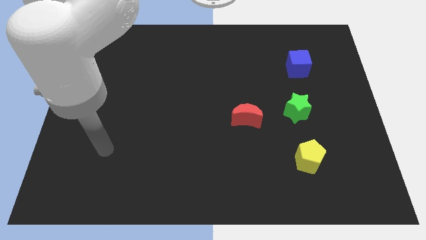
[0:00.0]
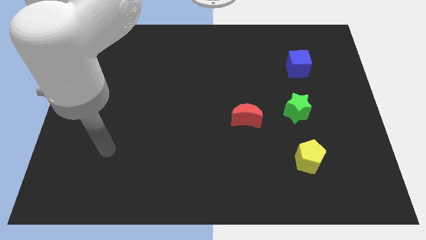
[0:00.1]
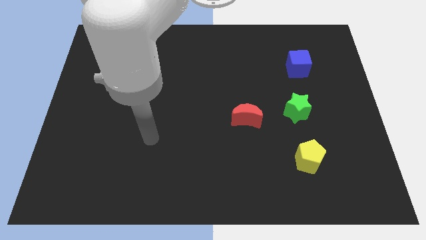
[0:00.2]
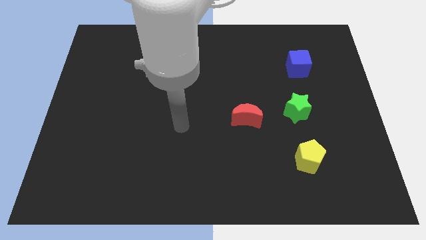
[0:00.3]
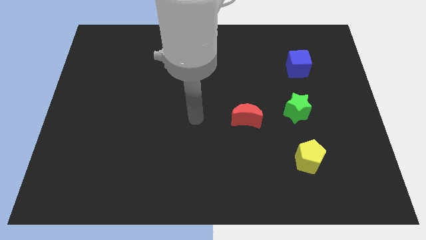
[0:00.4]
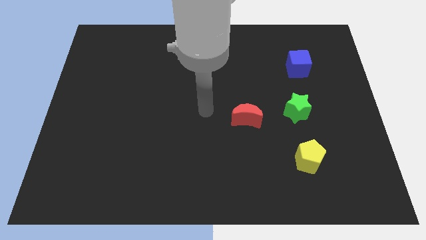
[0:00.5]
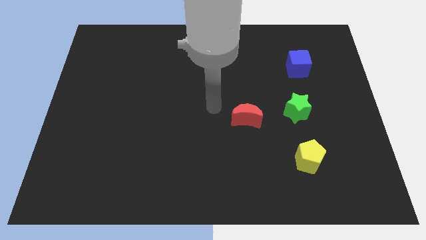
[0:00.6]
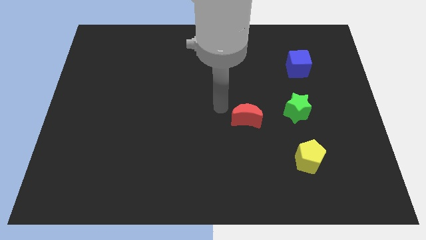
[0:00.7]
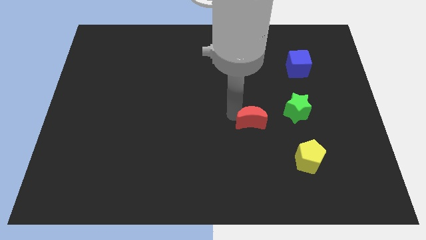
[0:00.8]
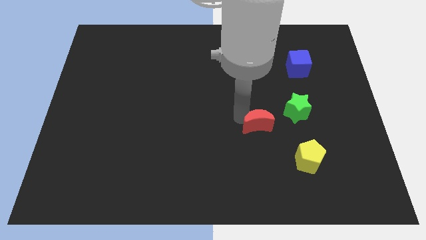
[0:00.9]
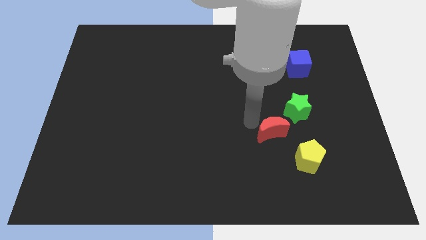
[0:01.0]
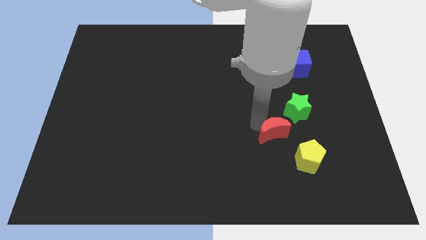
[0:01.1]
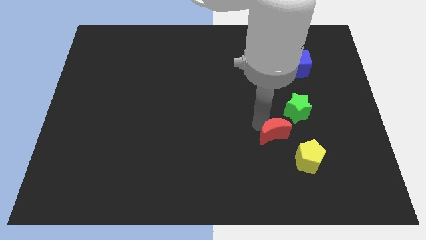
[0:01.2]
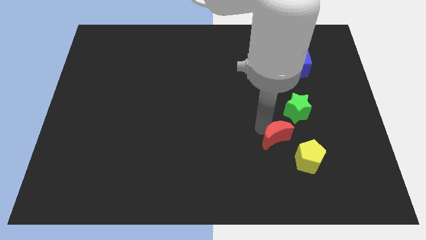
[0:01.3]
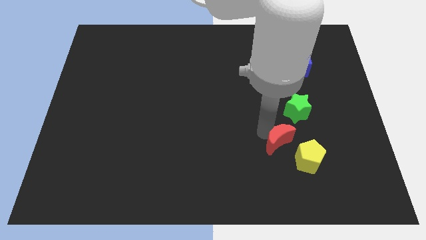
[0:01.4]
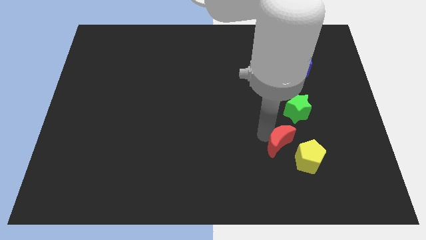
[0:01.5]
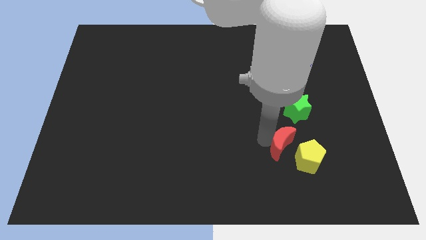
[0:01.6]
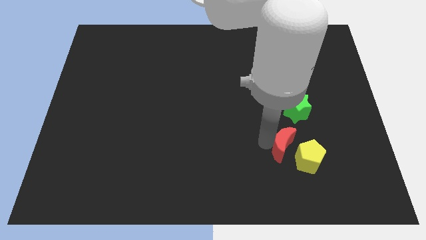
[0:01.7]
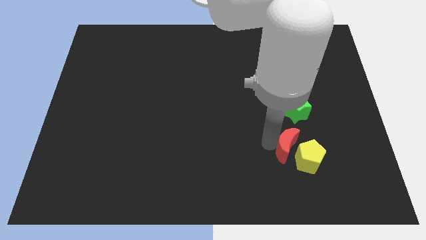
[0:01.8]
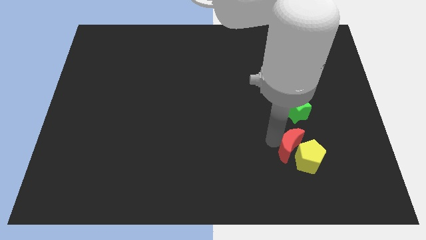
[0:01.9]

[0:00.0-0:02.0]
slide the moon next to the yellow block

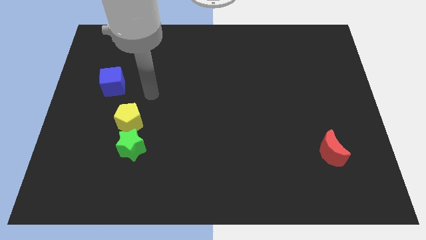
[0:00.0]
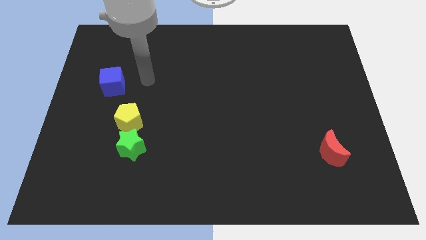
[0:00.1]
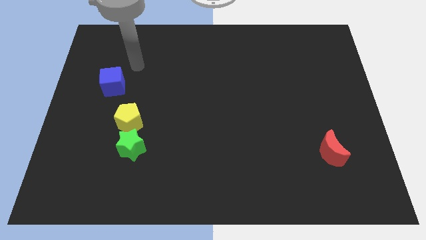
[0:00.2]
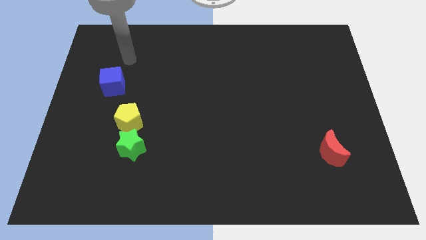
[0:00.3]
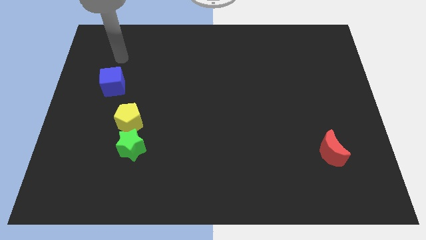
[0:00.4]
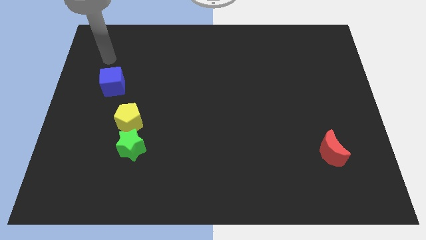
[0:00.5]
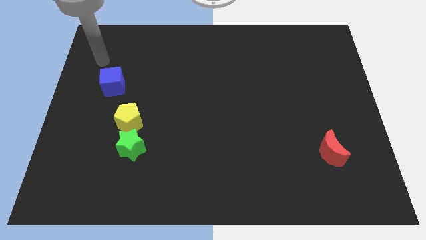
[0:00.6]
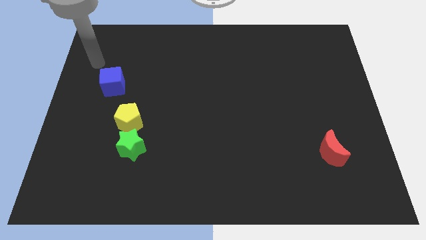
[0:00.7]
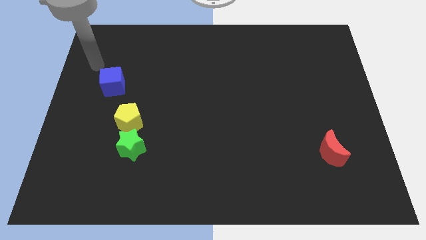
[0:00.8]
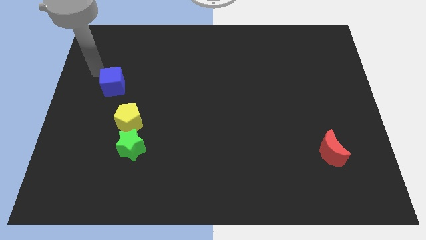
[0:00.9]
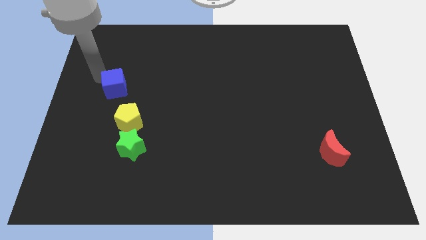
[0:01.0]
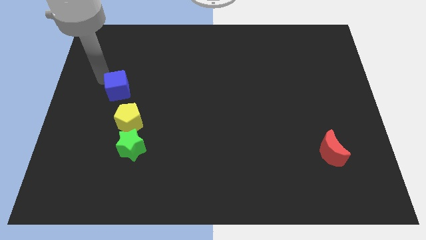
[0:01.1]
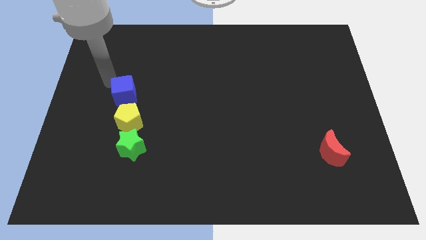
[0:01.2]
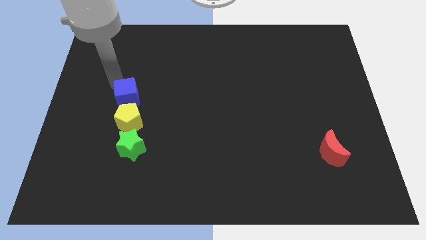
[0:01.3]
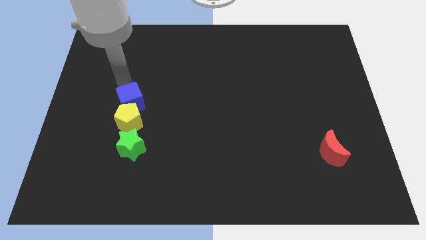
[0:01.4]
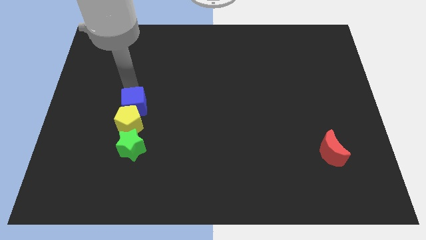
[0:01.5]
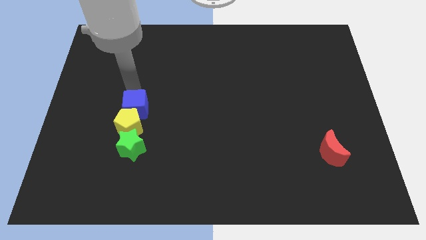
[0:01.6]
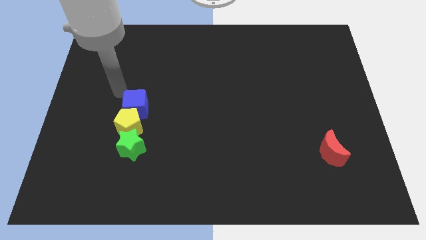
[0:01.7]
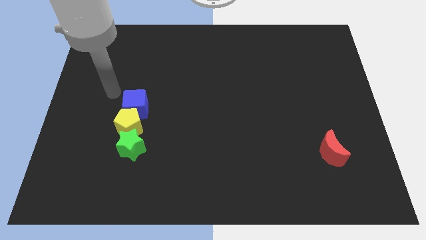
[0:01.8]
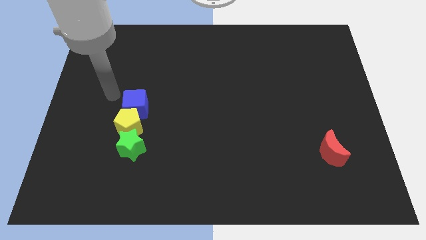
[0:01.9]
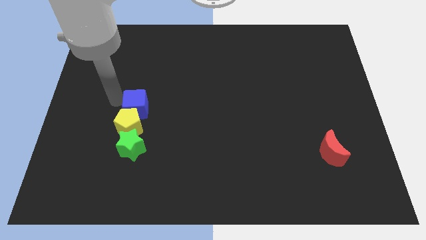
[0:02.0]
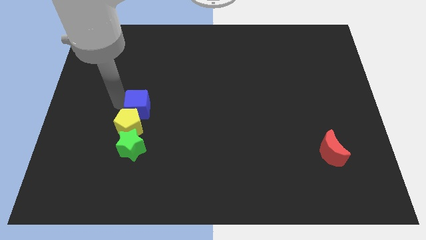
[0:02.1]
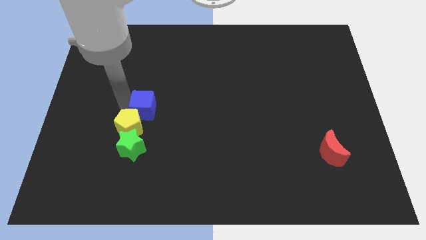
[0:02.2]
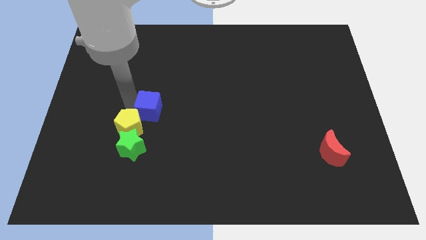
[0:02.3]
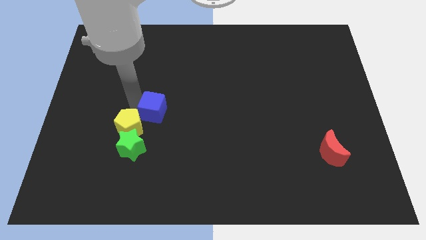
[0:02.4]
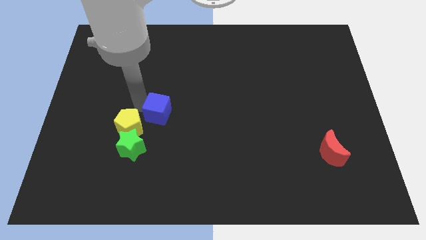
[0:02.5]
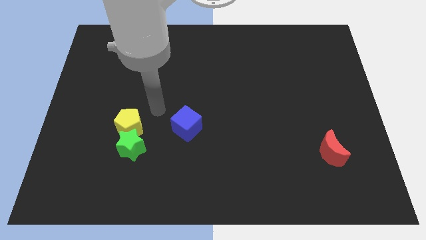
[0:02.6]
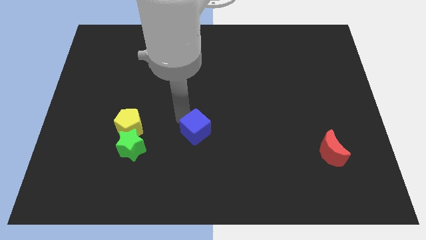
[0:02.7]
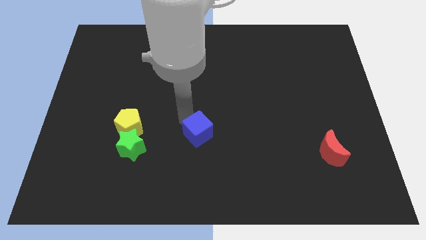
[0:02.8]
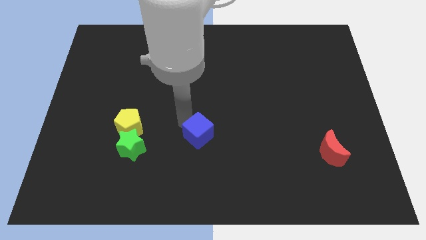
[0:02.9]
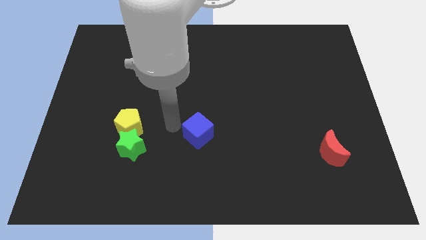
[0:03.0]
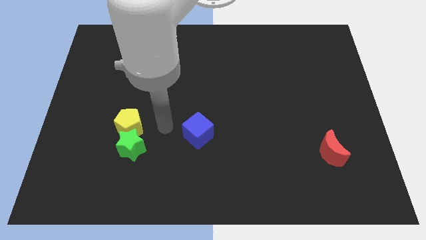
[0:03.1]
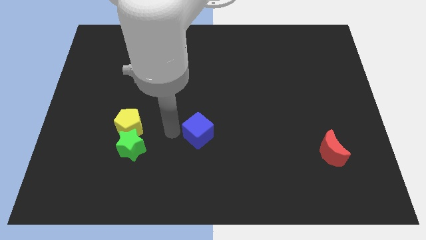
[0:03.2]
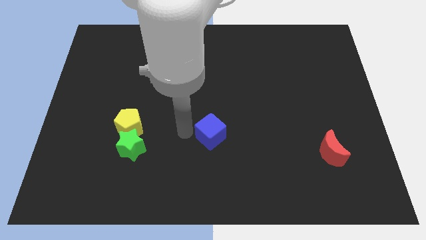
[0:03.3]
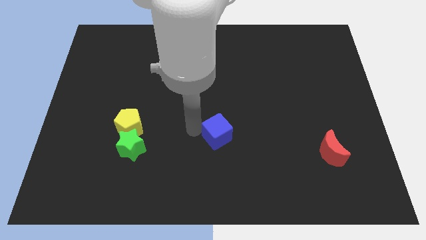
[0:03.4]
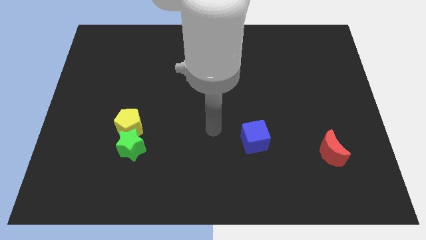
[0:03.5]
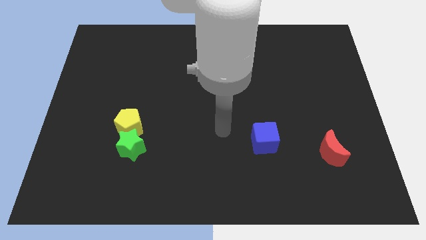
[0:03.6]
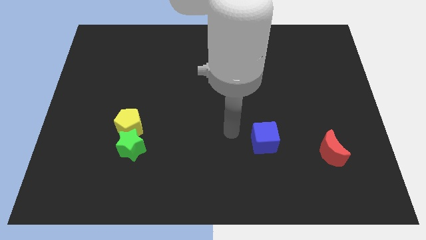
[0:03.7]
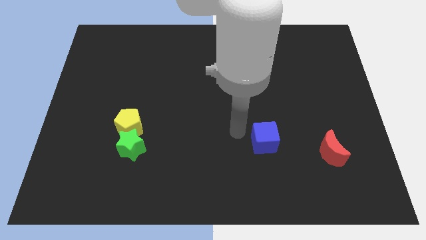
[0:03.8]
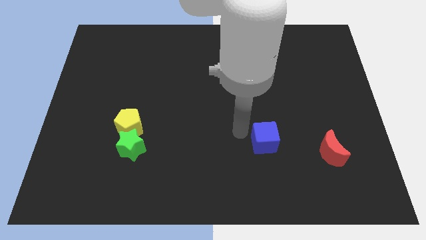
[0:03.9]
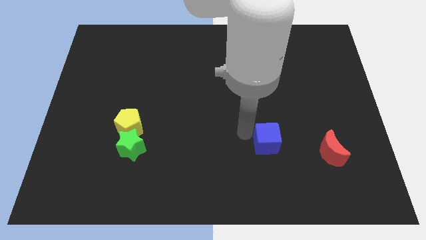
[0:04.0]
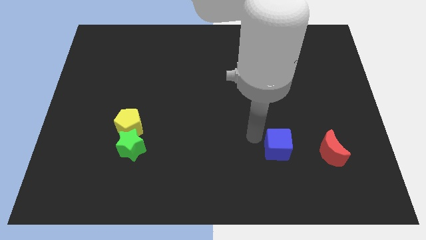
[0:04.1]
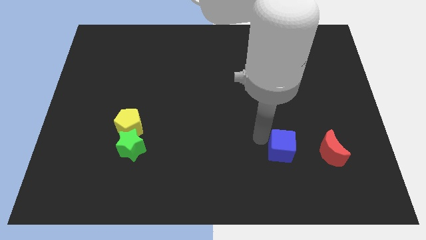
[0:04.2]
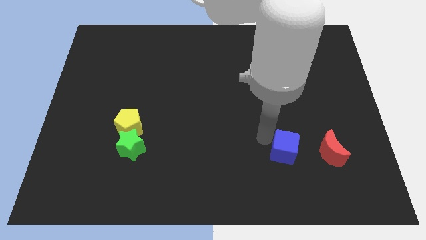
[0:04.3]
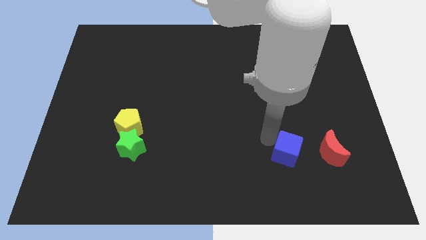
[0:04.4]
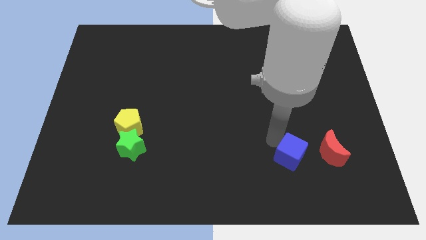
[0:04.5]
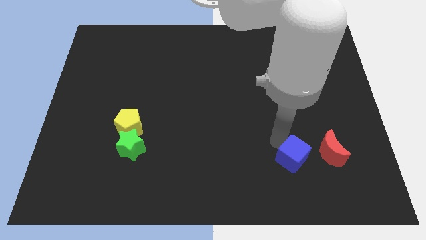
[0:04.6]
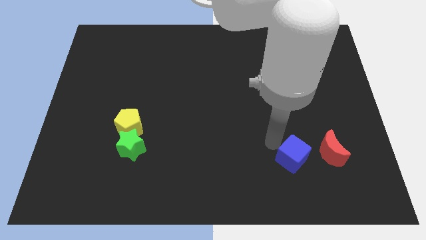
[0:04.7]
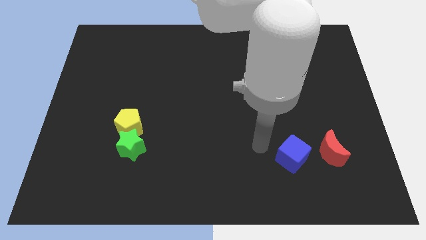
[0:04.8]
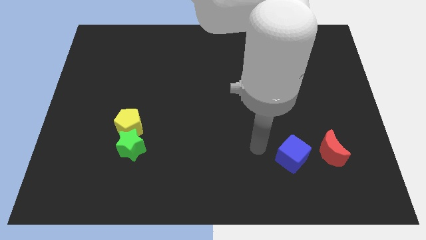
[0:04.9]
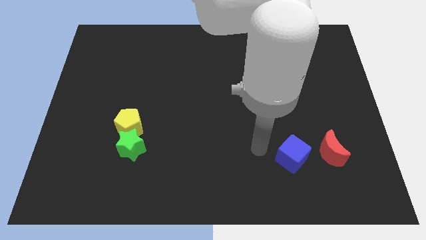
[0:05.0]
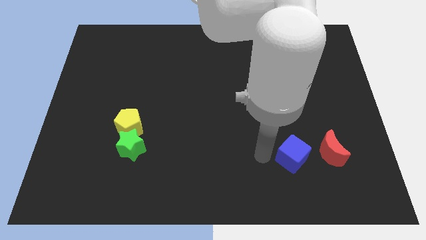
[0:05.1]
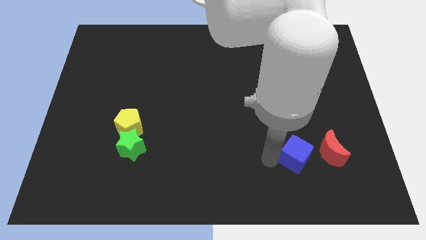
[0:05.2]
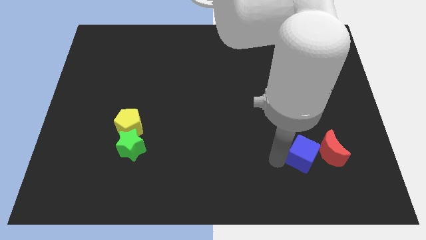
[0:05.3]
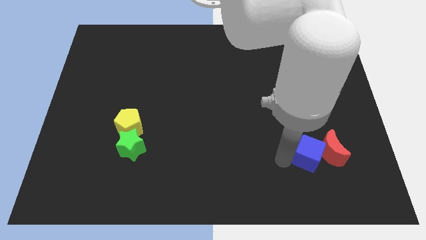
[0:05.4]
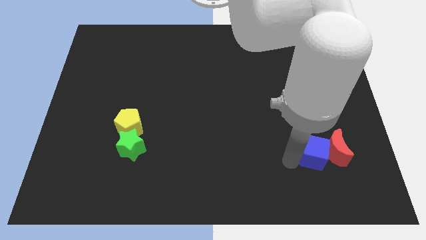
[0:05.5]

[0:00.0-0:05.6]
slide the blue block close to the red block

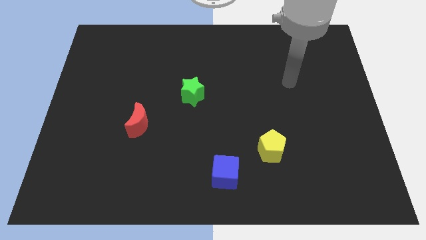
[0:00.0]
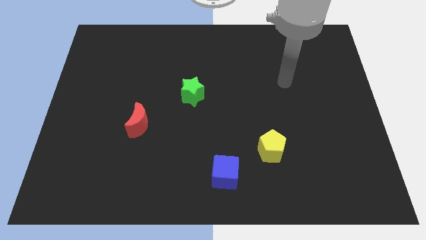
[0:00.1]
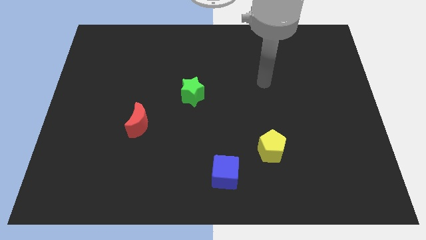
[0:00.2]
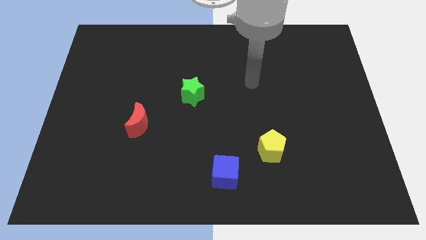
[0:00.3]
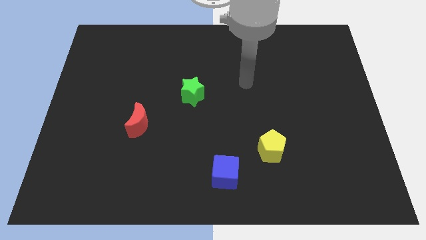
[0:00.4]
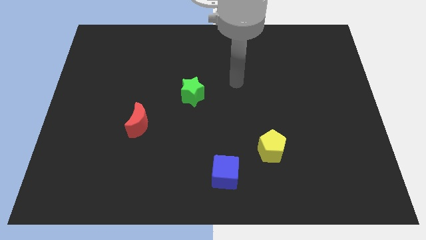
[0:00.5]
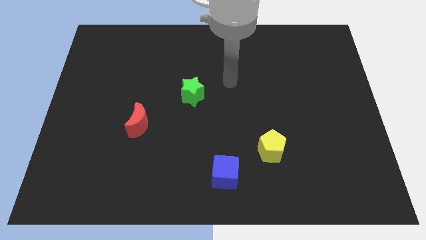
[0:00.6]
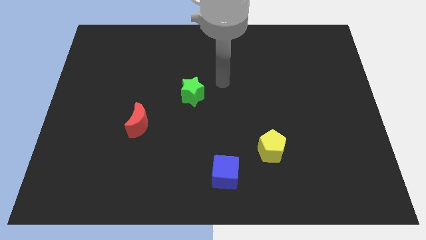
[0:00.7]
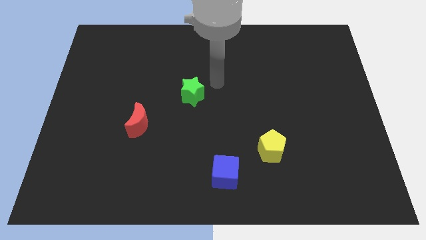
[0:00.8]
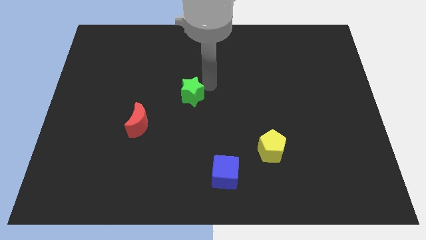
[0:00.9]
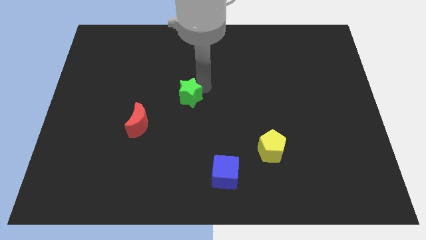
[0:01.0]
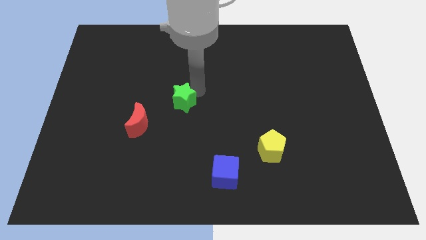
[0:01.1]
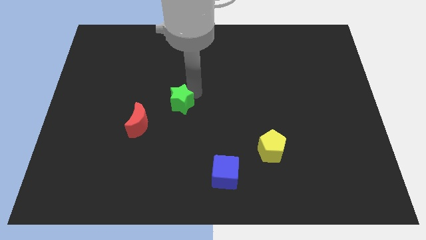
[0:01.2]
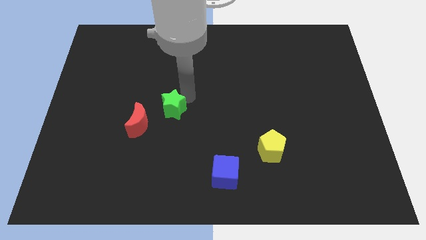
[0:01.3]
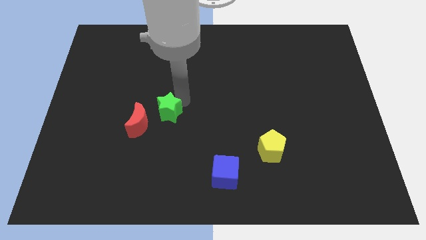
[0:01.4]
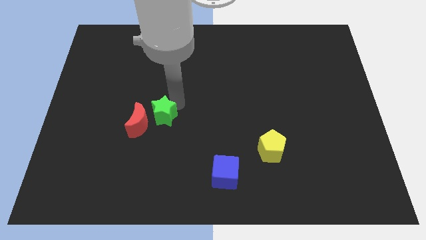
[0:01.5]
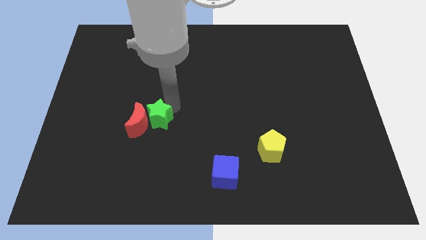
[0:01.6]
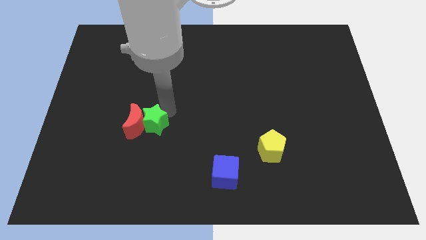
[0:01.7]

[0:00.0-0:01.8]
put the green block to the red block
